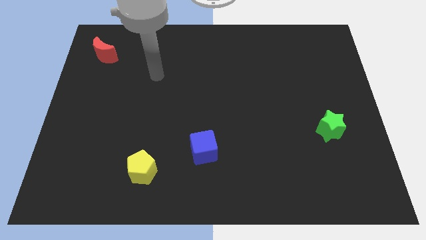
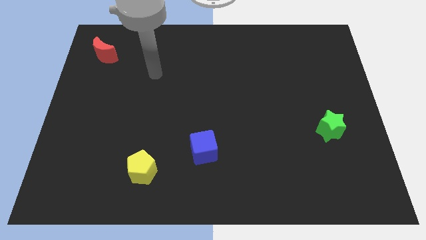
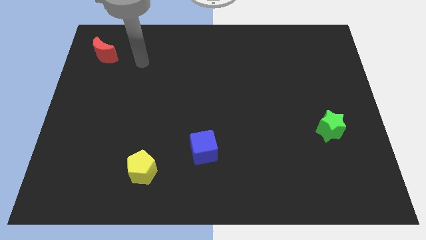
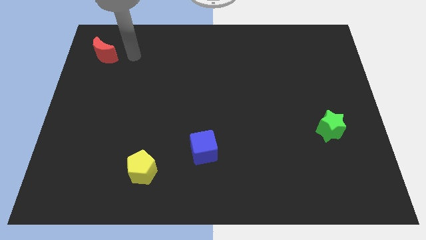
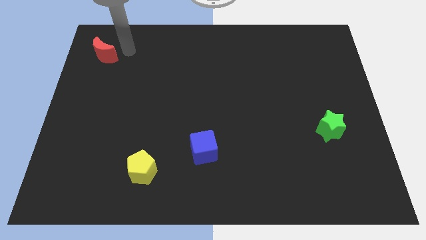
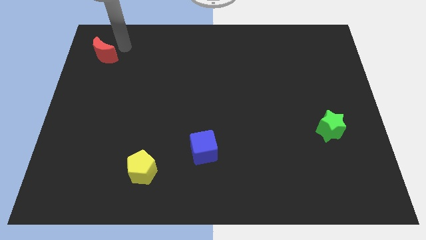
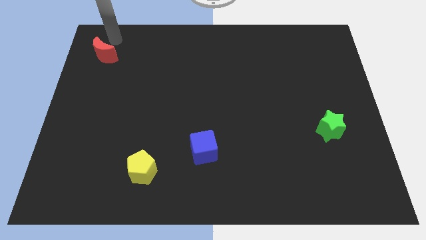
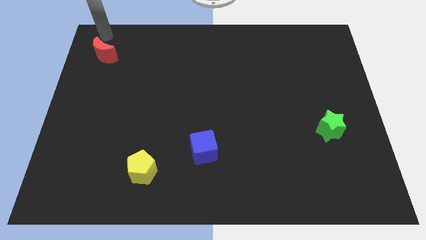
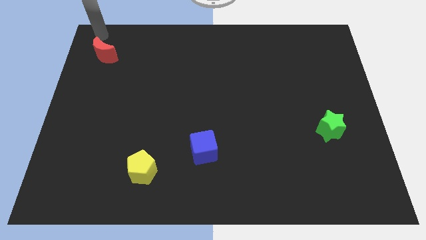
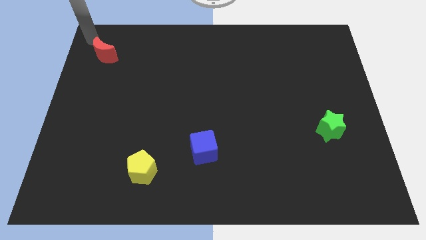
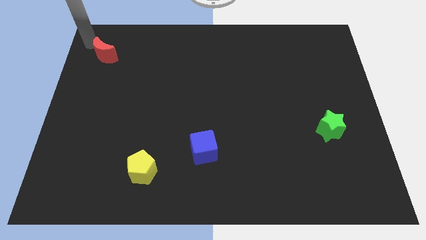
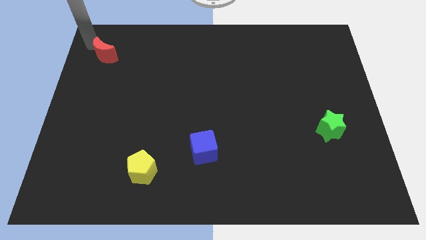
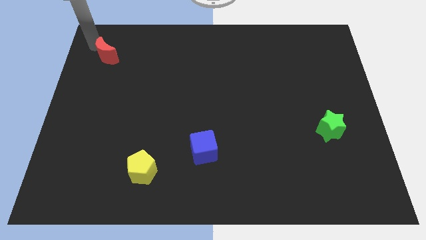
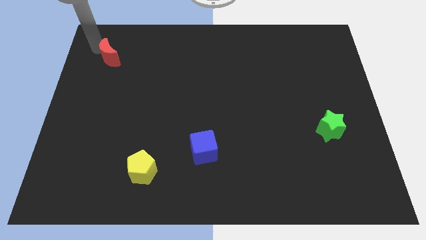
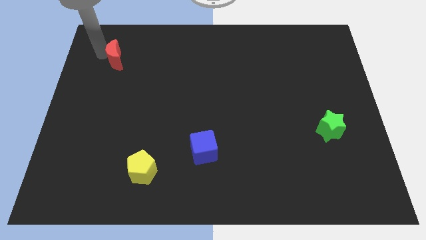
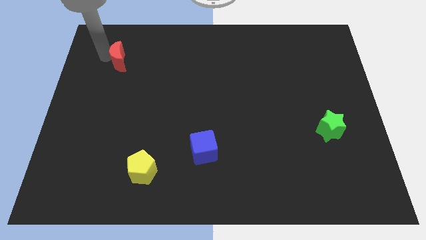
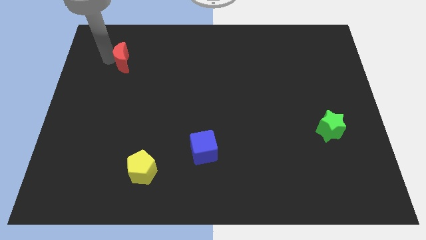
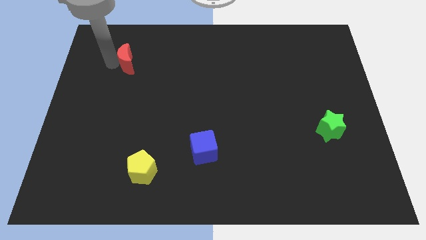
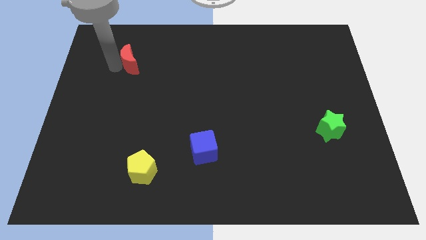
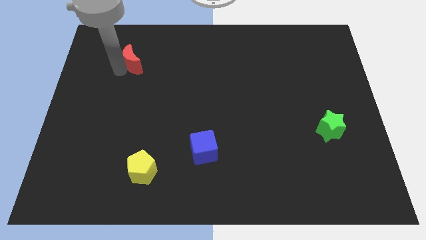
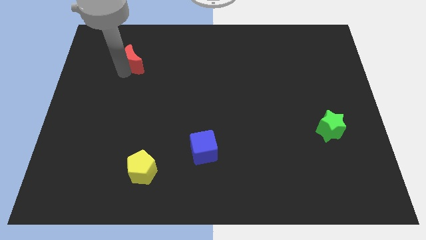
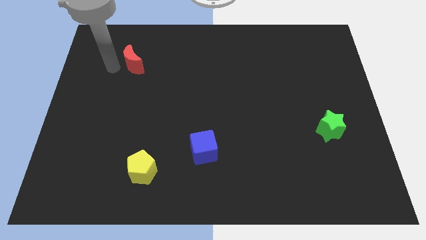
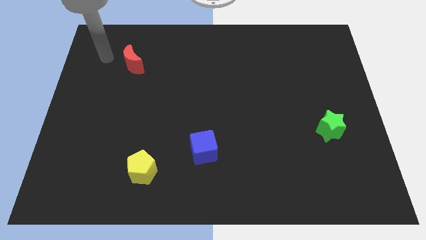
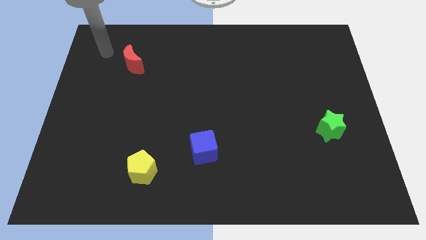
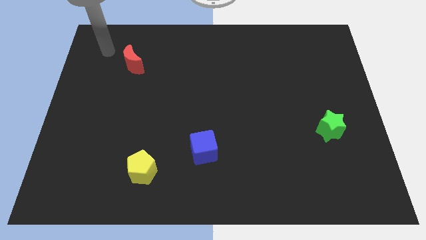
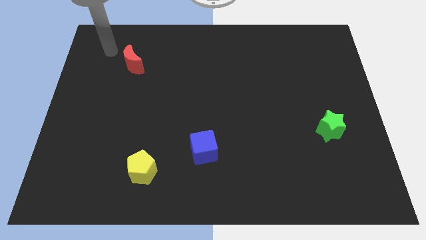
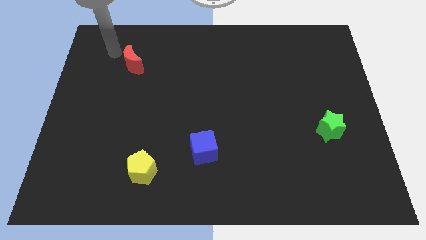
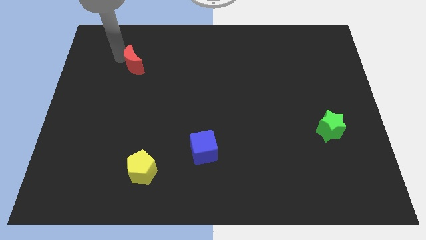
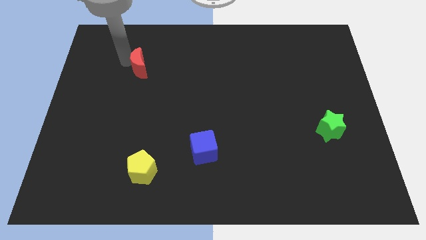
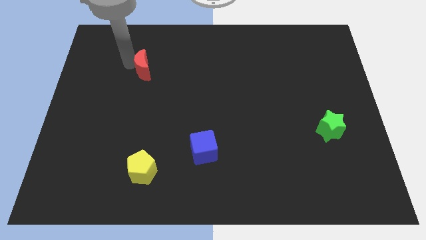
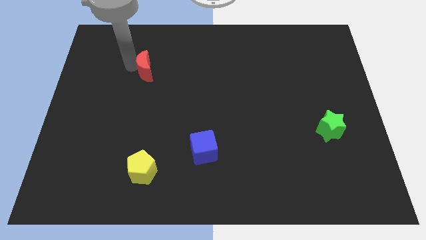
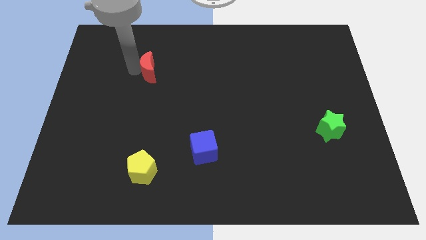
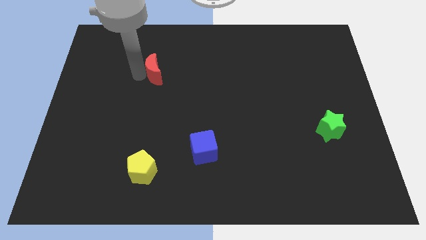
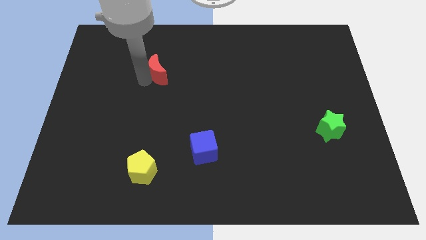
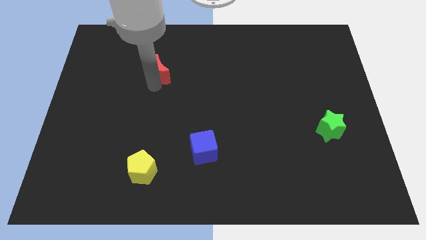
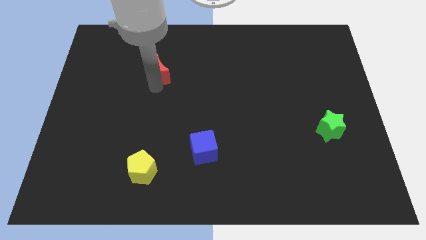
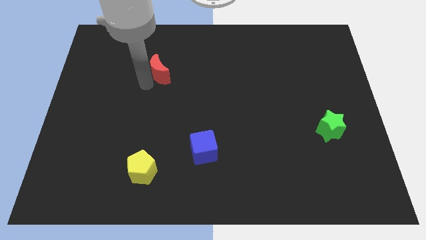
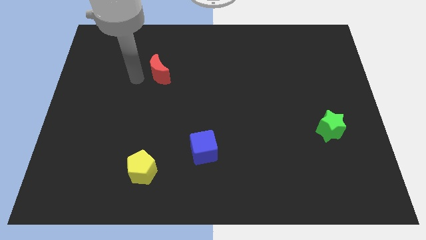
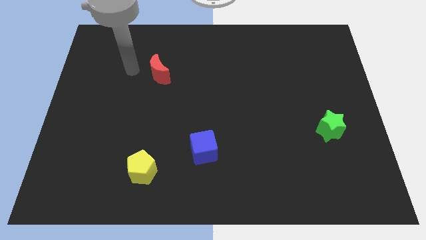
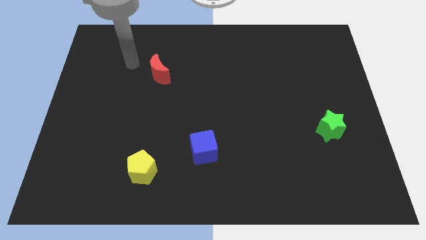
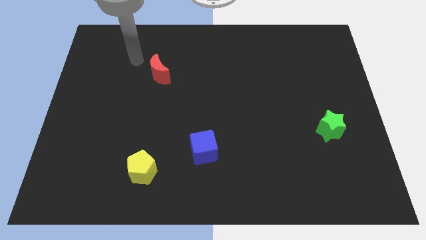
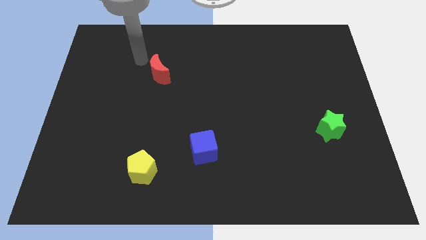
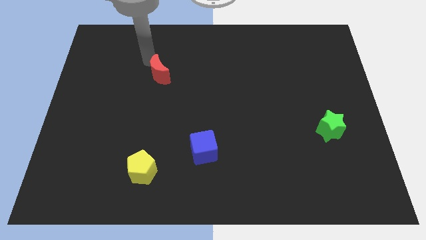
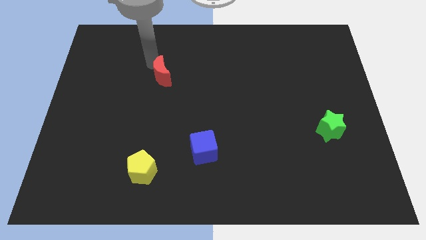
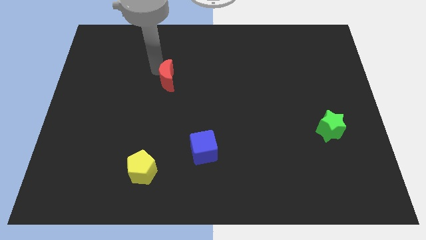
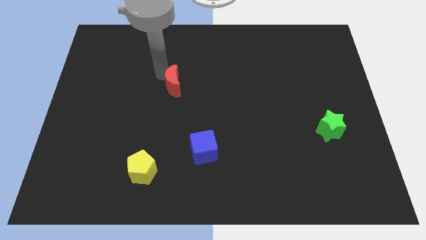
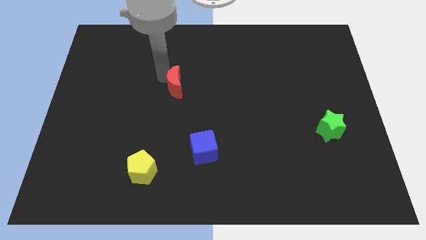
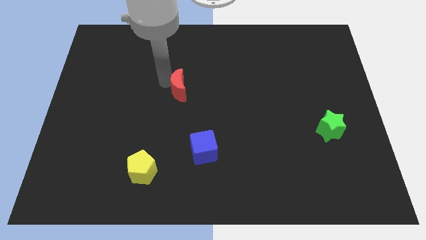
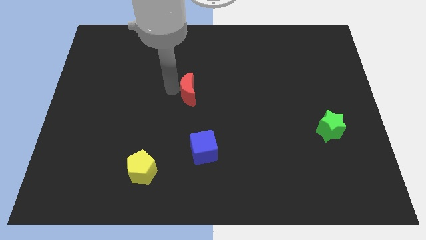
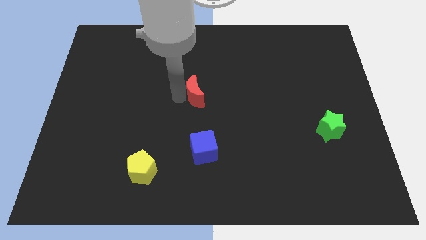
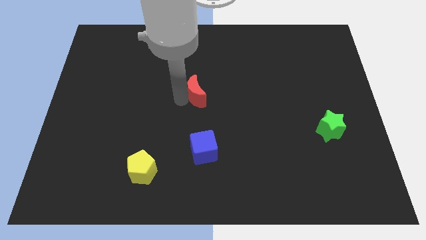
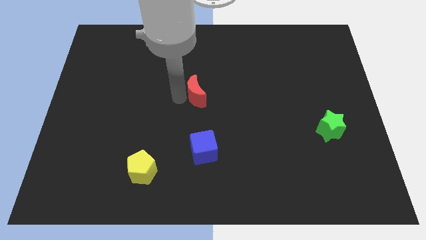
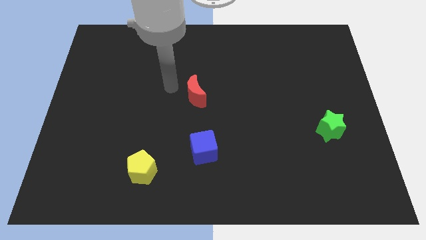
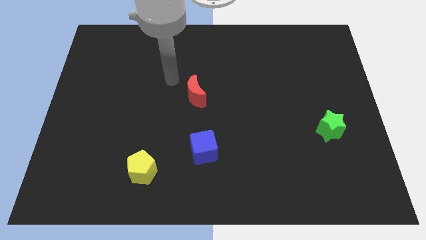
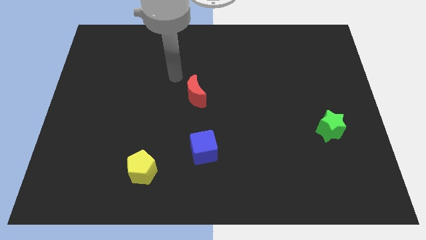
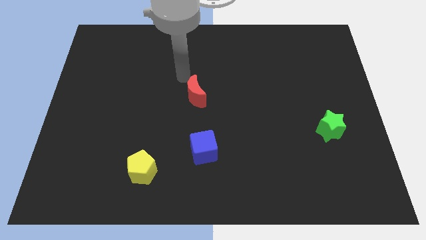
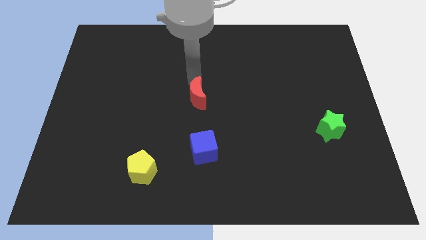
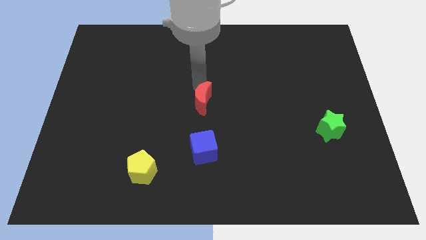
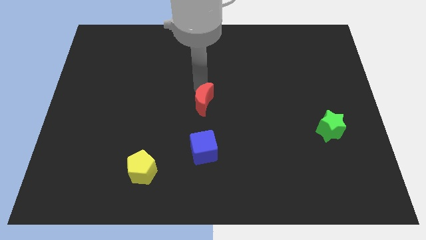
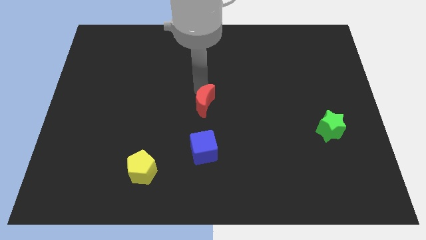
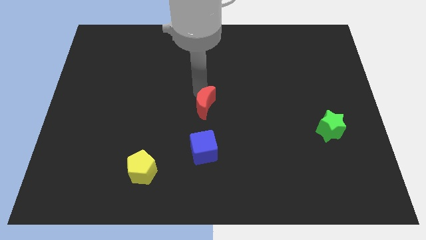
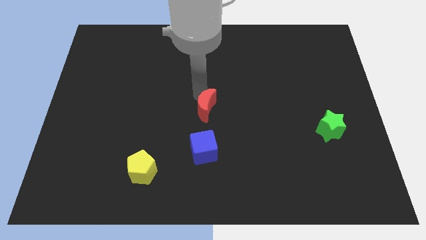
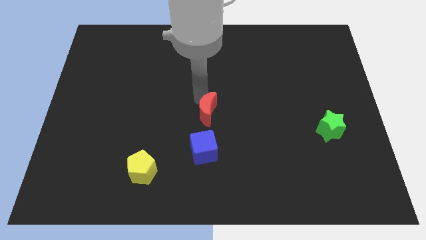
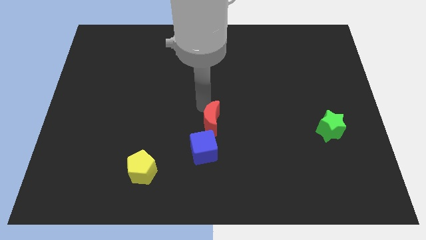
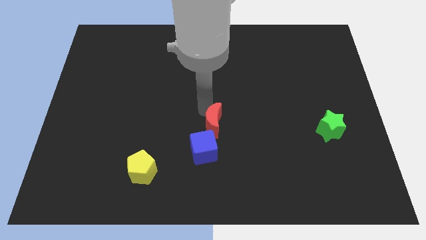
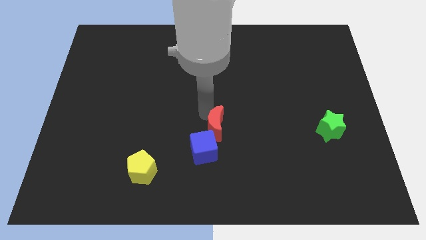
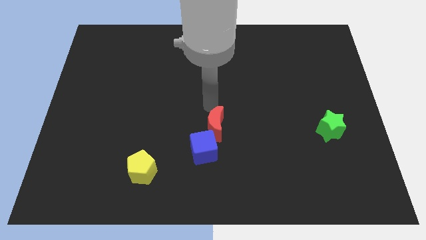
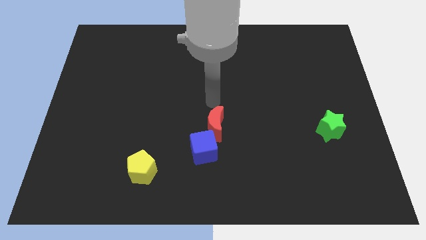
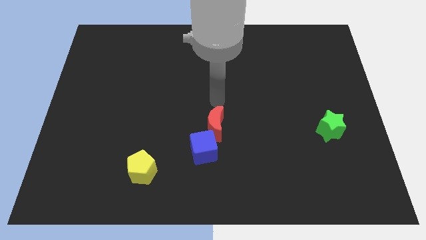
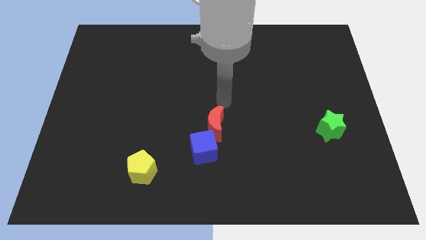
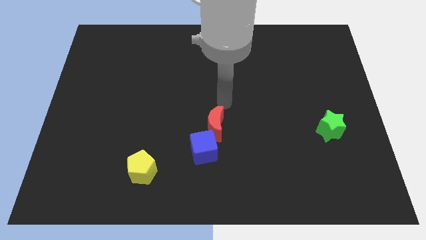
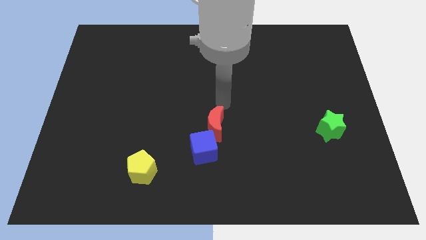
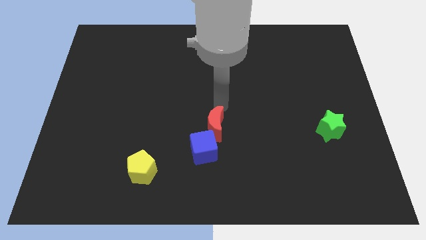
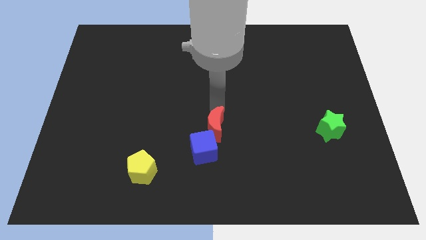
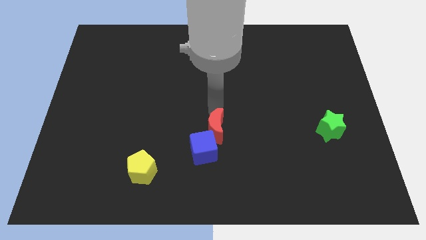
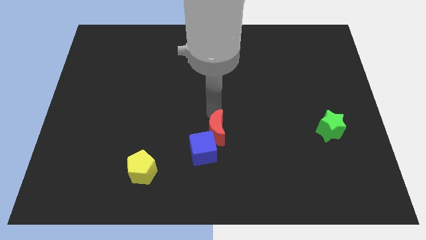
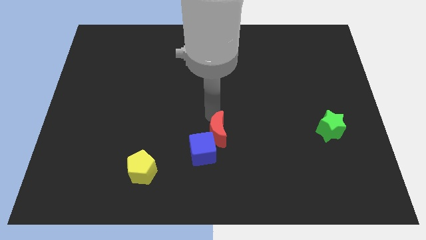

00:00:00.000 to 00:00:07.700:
push the red block next to the blue block
